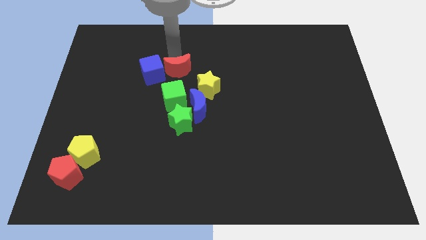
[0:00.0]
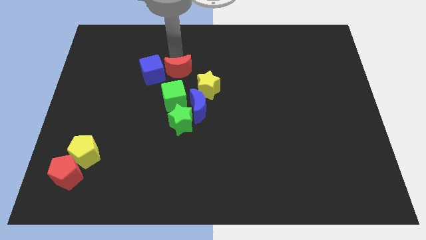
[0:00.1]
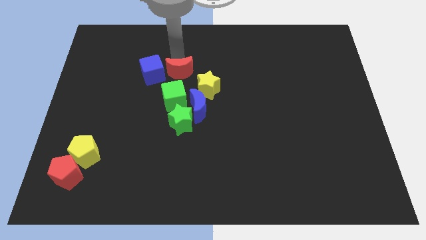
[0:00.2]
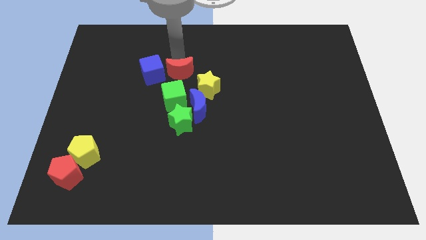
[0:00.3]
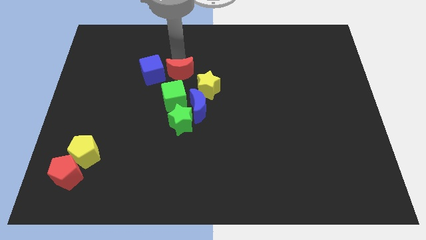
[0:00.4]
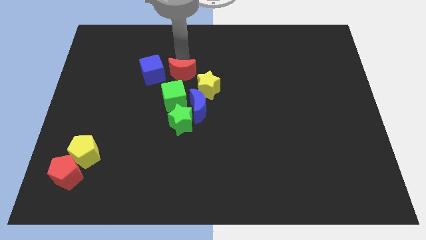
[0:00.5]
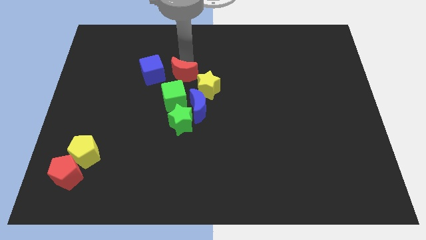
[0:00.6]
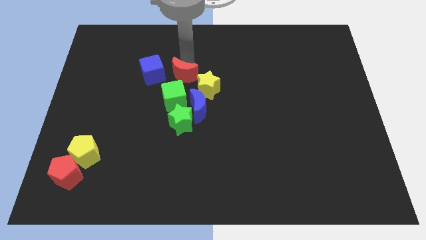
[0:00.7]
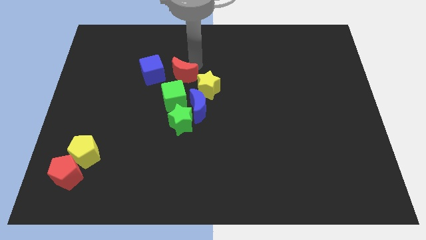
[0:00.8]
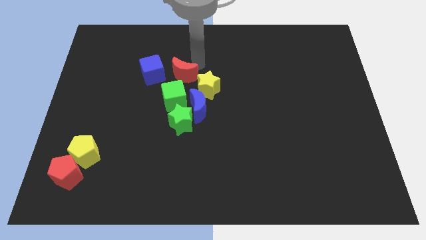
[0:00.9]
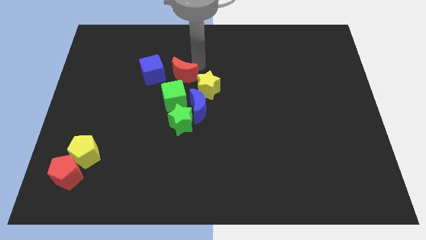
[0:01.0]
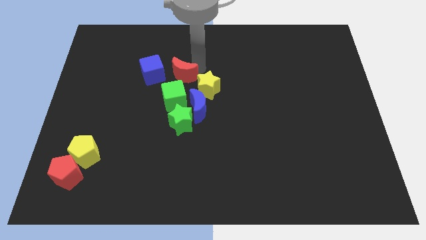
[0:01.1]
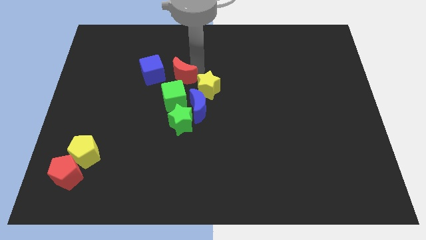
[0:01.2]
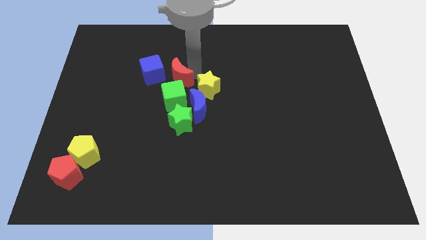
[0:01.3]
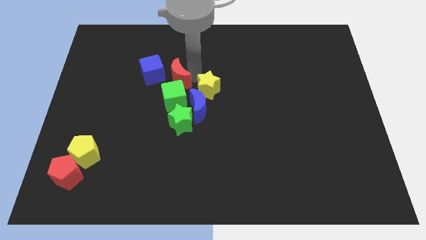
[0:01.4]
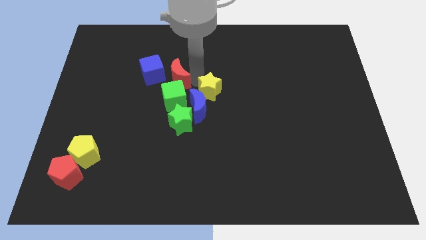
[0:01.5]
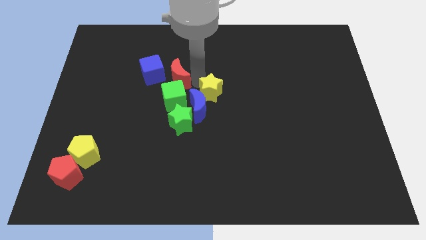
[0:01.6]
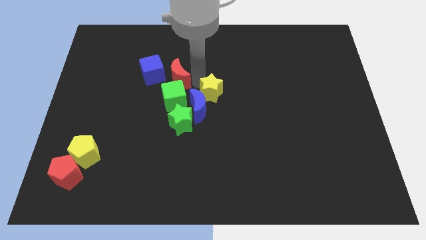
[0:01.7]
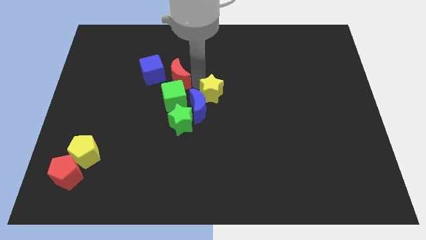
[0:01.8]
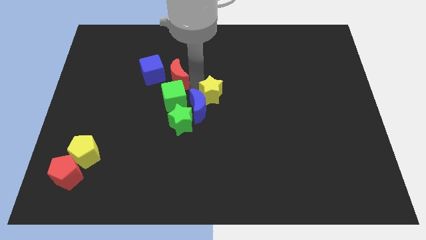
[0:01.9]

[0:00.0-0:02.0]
push the red moon close to the green cube

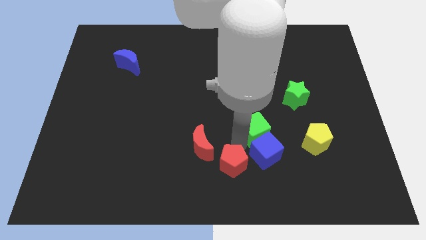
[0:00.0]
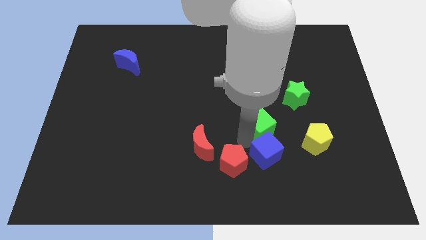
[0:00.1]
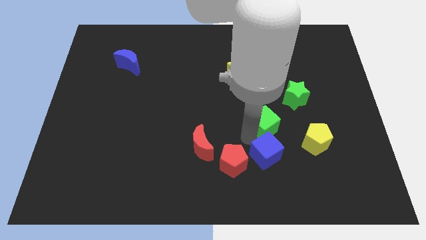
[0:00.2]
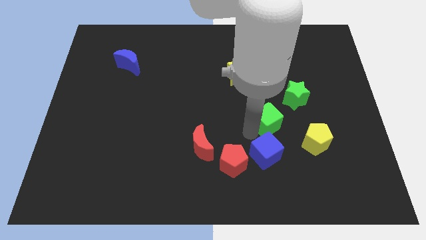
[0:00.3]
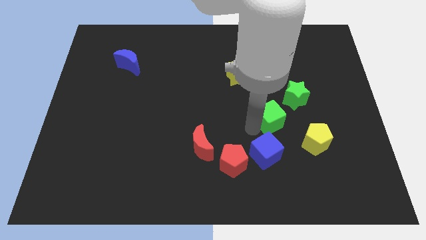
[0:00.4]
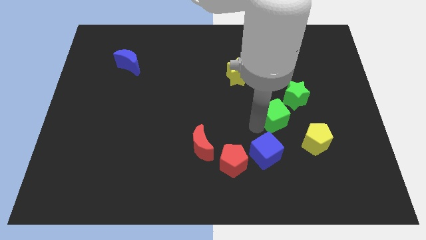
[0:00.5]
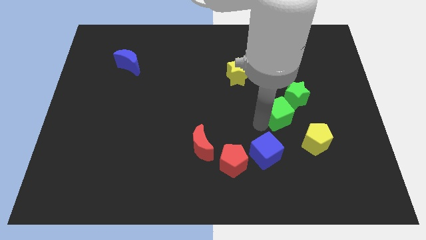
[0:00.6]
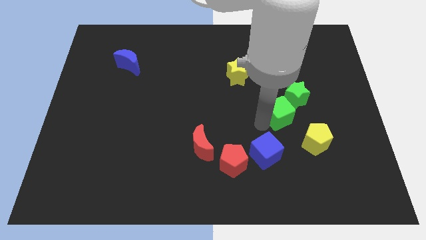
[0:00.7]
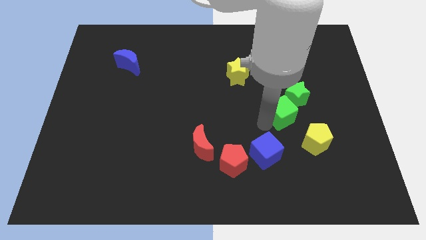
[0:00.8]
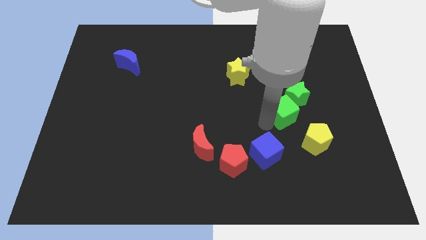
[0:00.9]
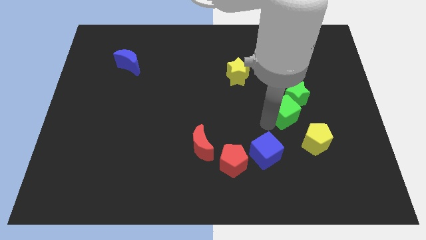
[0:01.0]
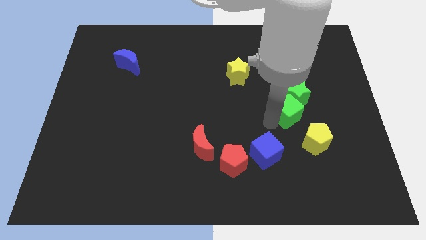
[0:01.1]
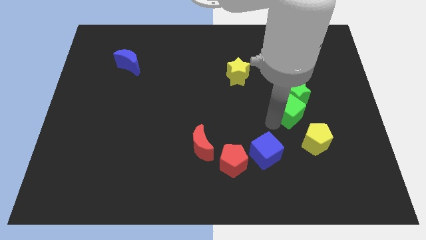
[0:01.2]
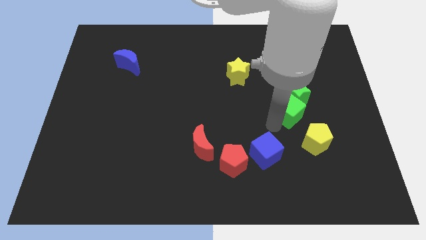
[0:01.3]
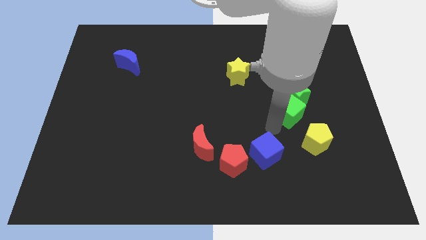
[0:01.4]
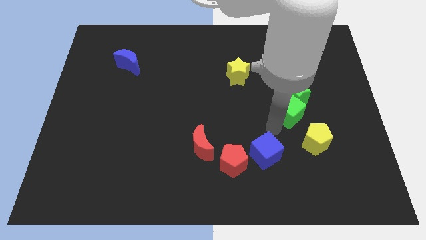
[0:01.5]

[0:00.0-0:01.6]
move the green cube into green star

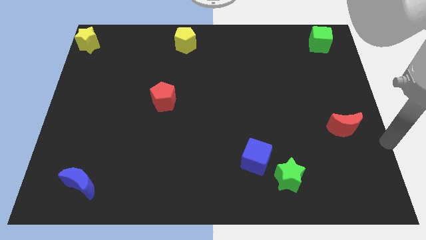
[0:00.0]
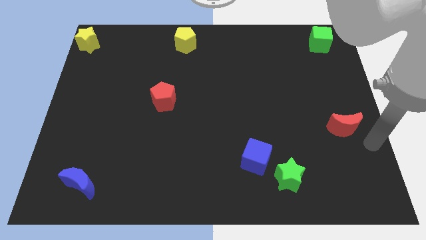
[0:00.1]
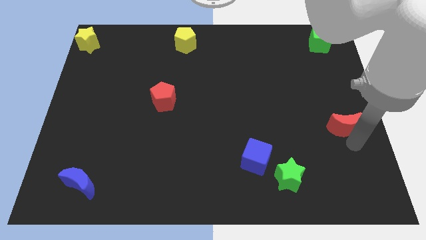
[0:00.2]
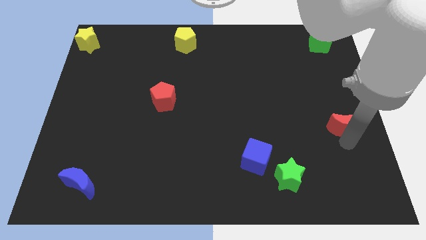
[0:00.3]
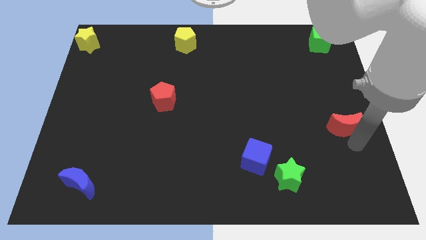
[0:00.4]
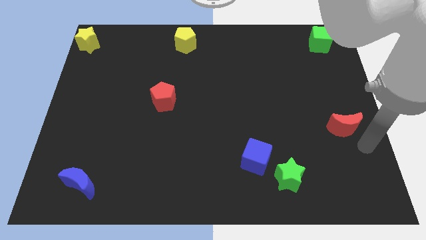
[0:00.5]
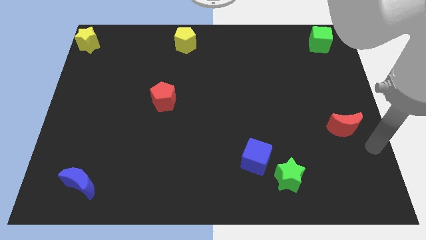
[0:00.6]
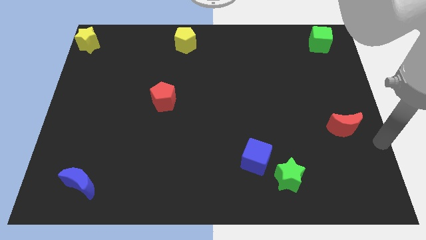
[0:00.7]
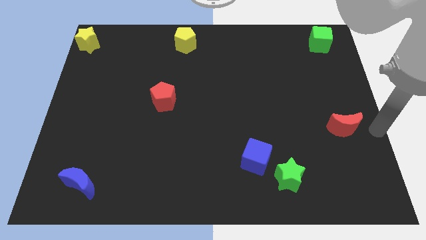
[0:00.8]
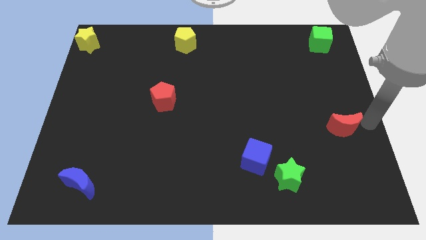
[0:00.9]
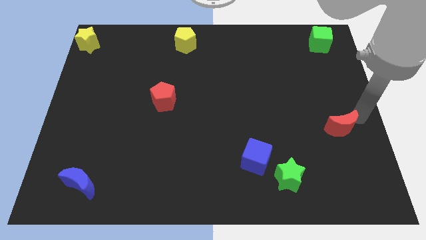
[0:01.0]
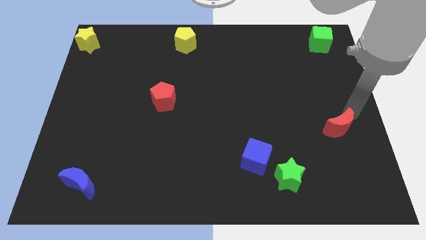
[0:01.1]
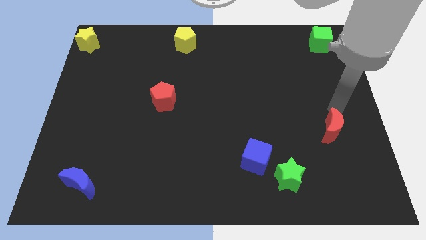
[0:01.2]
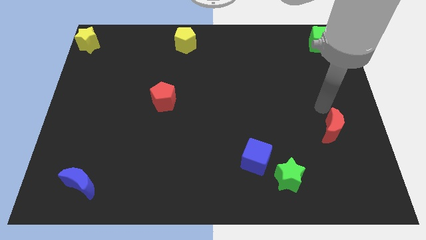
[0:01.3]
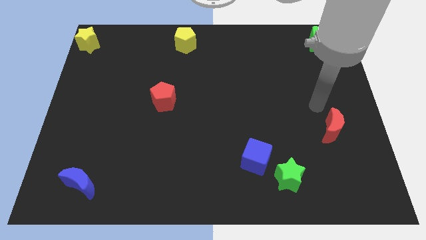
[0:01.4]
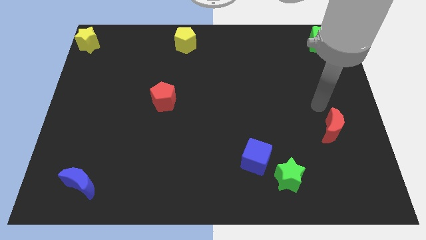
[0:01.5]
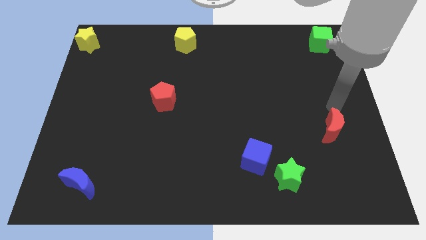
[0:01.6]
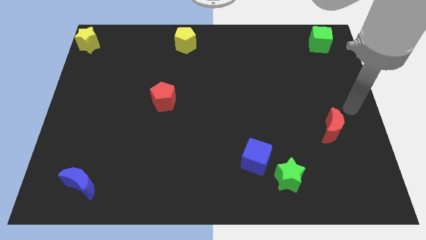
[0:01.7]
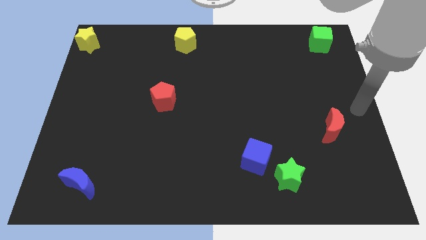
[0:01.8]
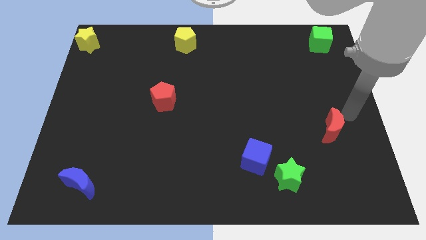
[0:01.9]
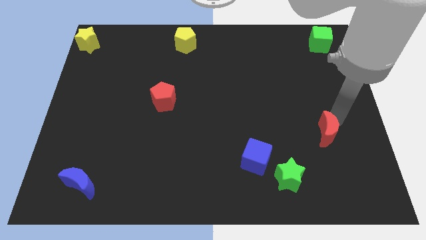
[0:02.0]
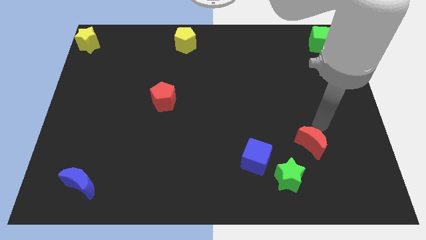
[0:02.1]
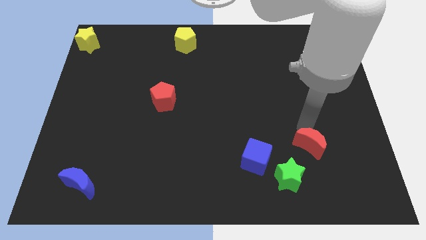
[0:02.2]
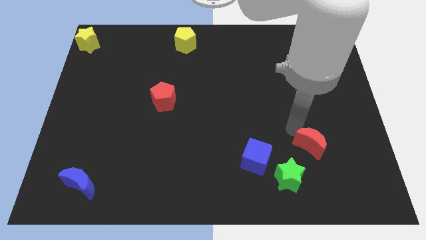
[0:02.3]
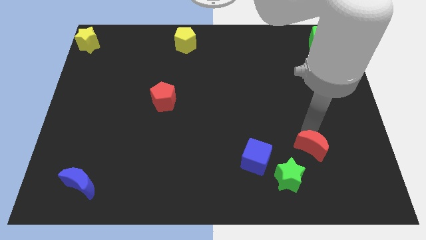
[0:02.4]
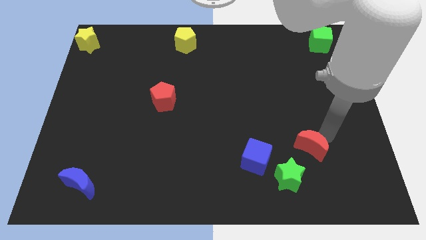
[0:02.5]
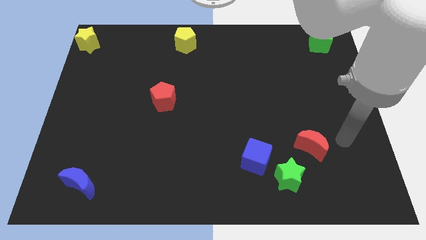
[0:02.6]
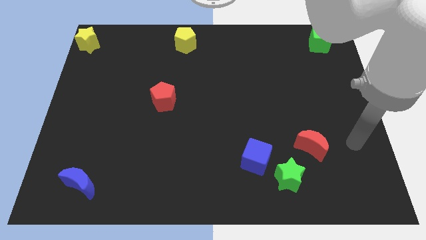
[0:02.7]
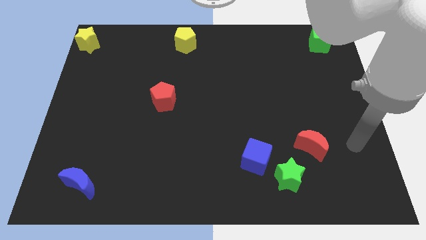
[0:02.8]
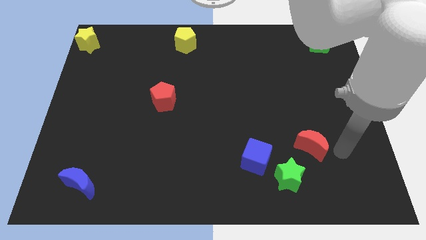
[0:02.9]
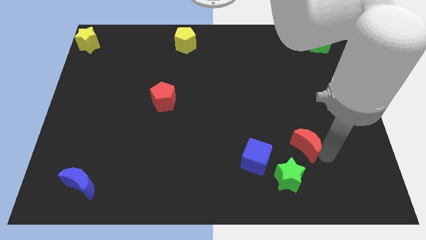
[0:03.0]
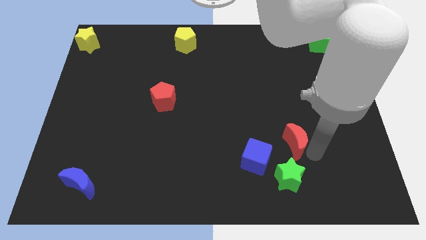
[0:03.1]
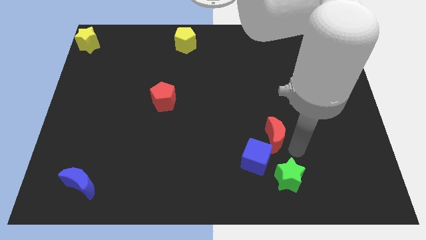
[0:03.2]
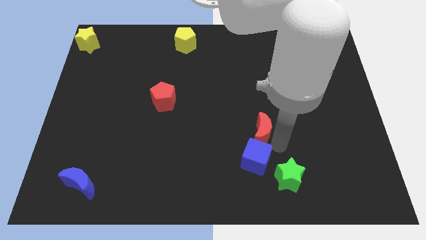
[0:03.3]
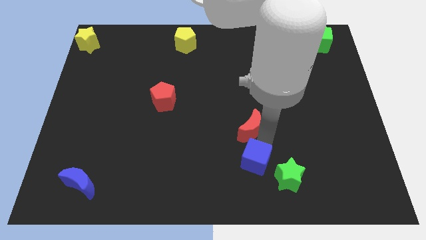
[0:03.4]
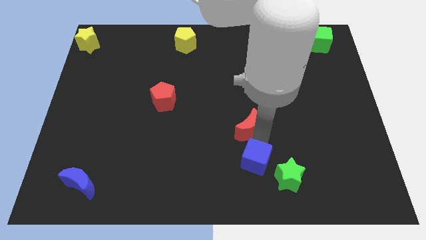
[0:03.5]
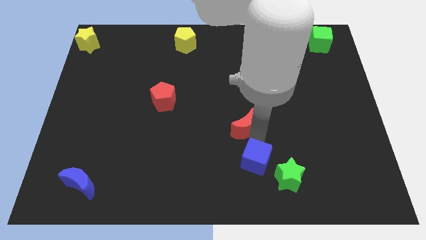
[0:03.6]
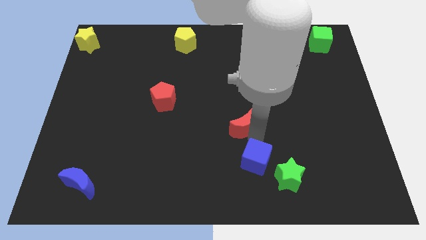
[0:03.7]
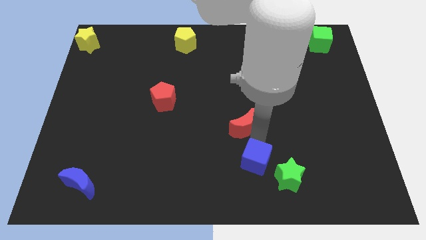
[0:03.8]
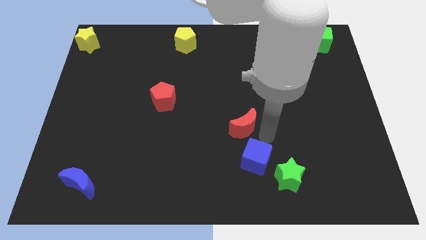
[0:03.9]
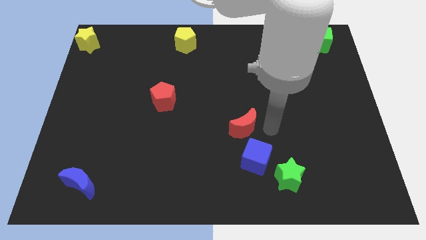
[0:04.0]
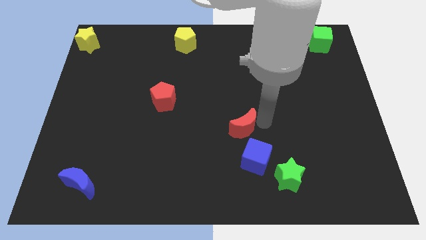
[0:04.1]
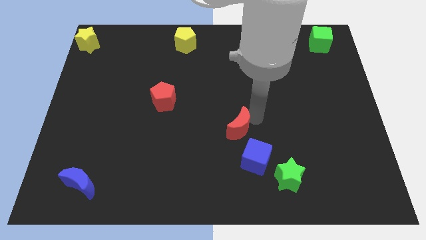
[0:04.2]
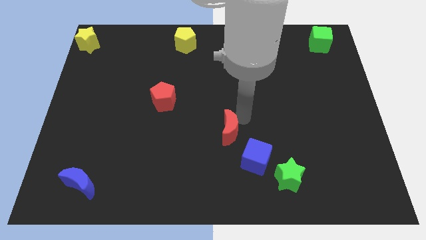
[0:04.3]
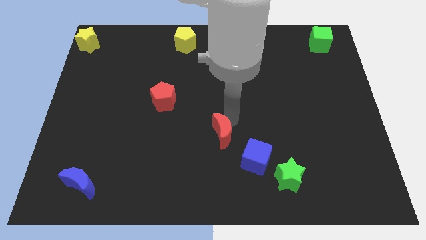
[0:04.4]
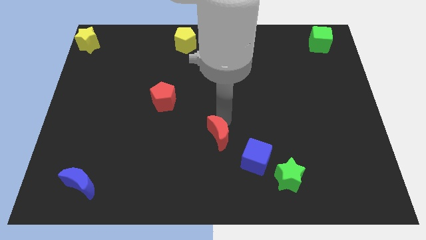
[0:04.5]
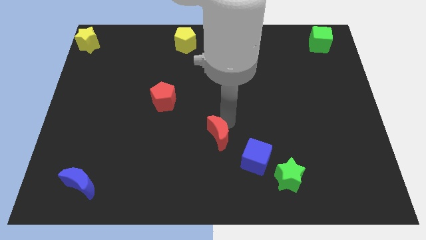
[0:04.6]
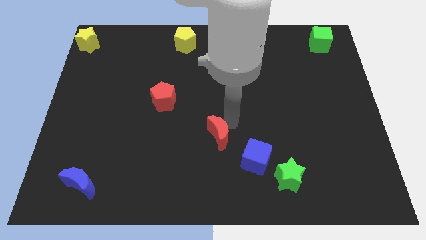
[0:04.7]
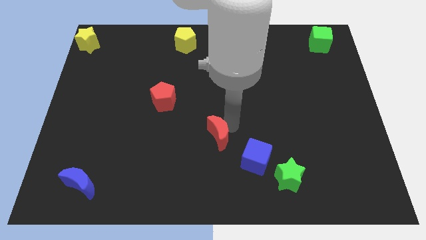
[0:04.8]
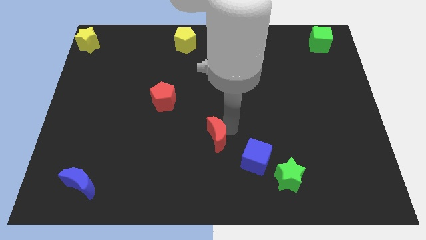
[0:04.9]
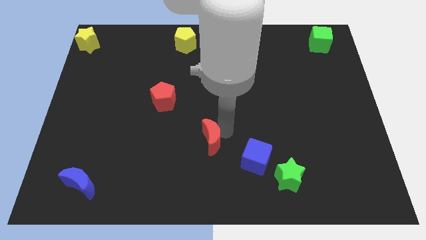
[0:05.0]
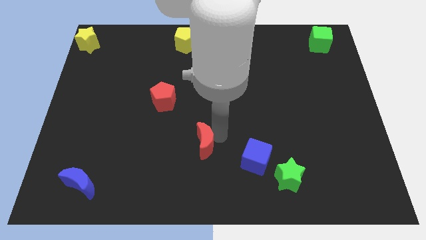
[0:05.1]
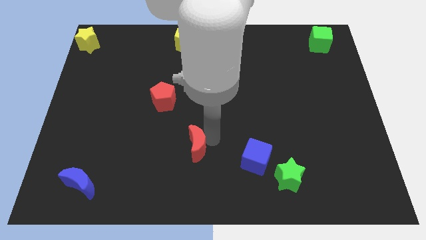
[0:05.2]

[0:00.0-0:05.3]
place the red moon in between the red pentagon and blue cube
